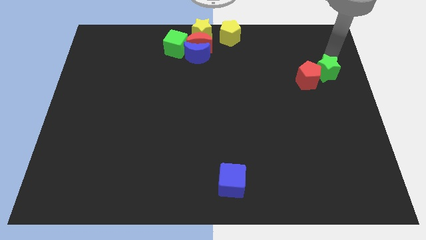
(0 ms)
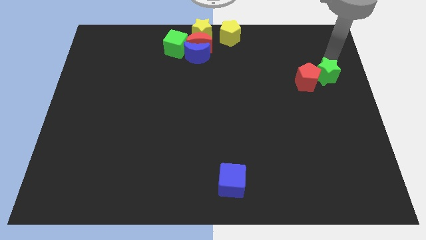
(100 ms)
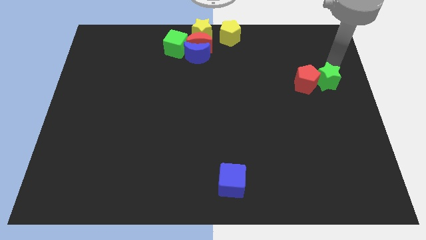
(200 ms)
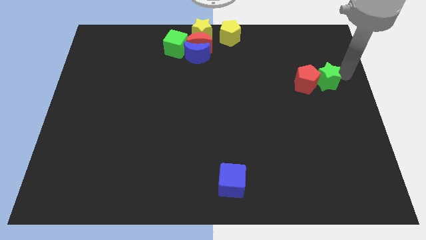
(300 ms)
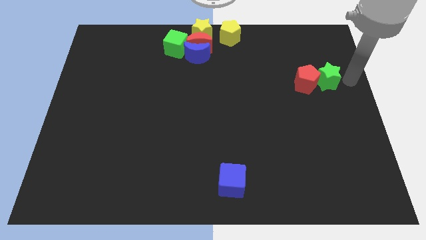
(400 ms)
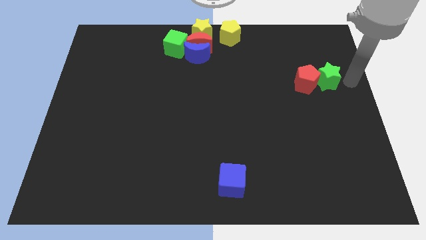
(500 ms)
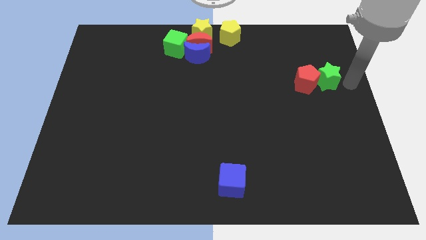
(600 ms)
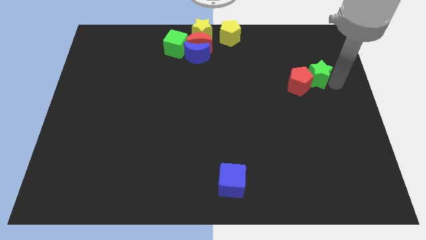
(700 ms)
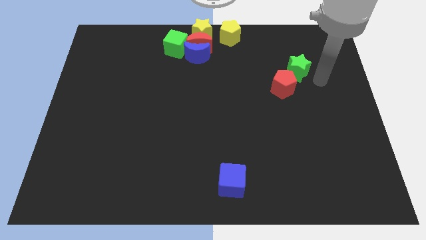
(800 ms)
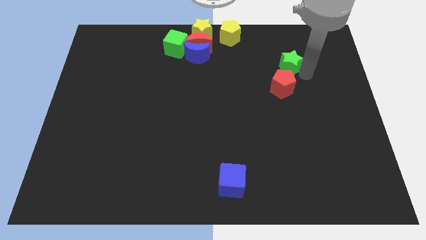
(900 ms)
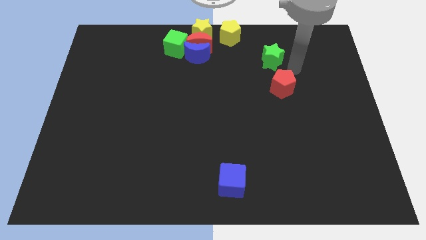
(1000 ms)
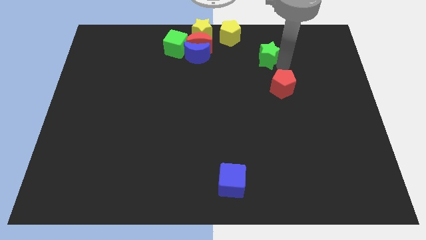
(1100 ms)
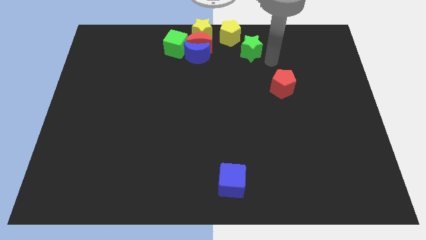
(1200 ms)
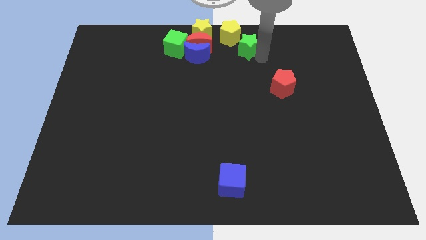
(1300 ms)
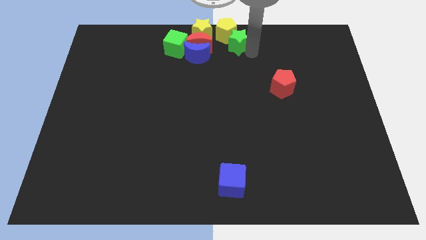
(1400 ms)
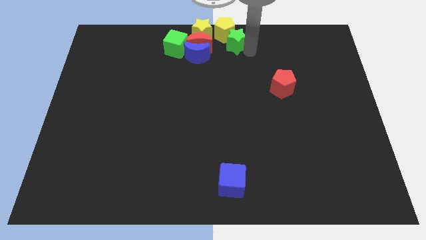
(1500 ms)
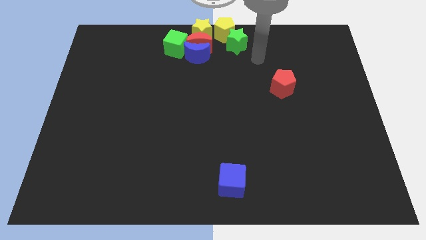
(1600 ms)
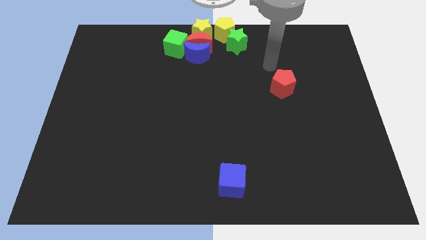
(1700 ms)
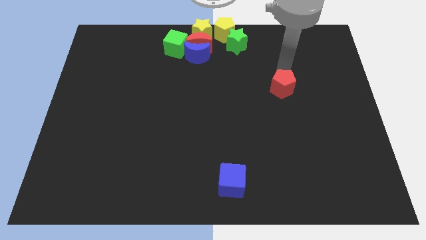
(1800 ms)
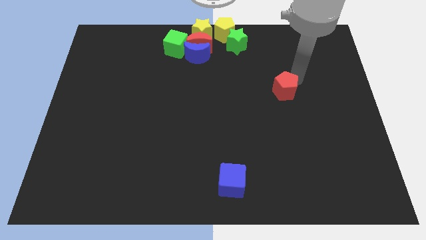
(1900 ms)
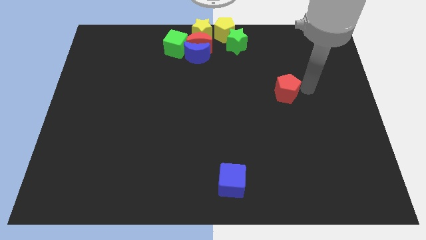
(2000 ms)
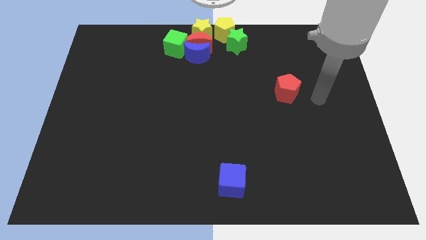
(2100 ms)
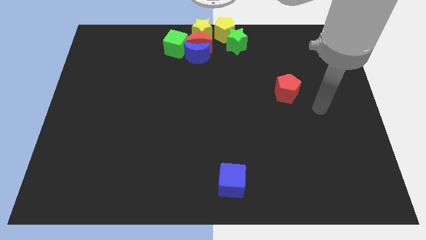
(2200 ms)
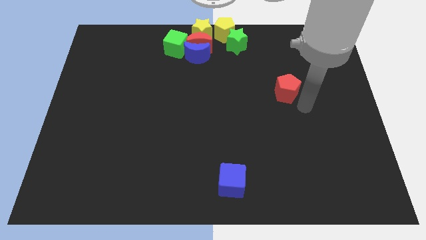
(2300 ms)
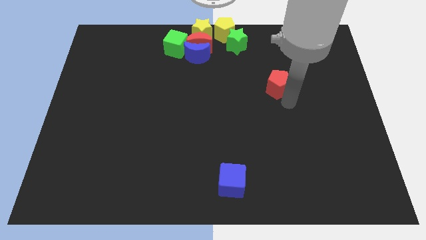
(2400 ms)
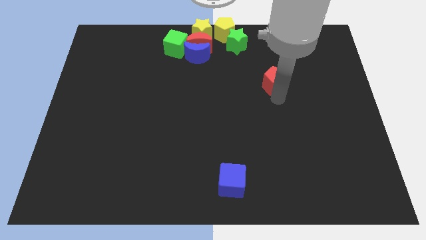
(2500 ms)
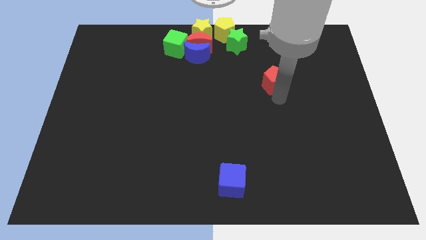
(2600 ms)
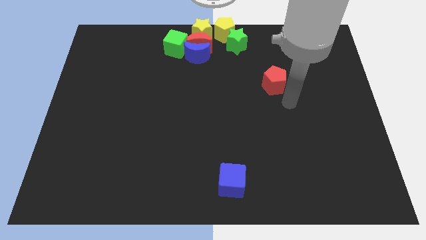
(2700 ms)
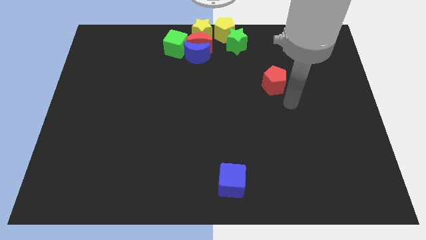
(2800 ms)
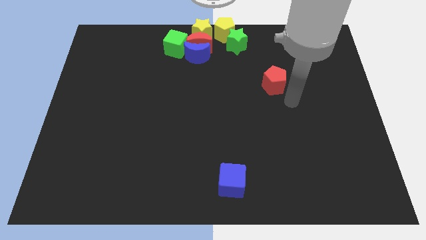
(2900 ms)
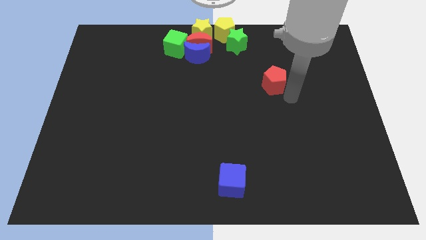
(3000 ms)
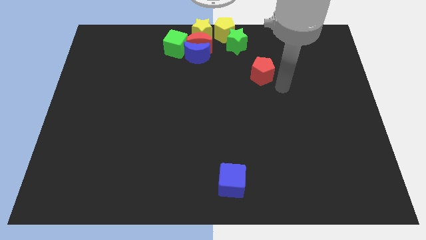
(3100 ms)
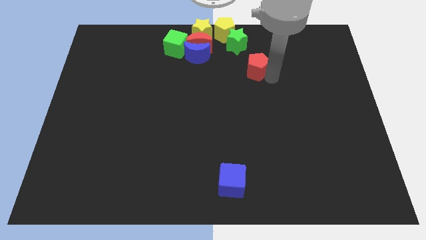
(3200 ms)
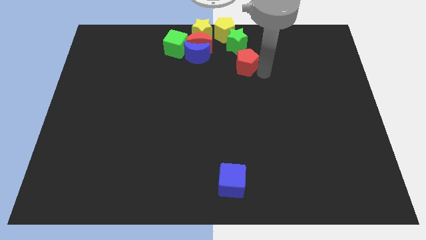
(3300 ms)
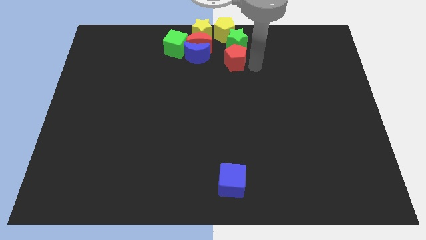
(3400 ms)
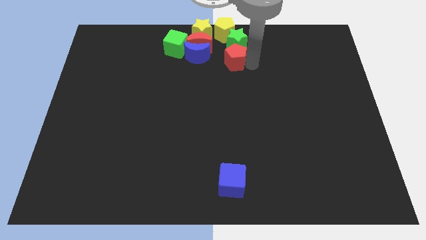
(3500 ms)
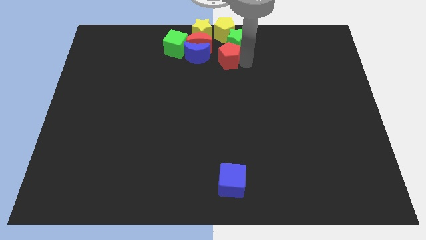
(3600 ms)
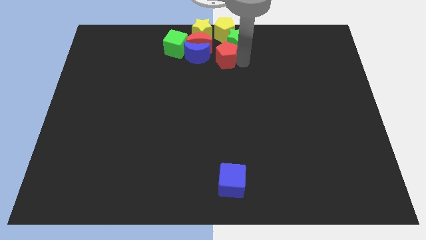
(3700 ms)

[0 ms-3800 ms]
push the green star and the red pentagon to the top center of the board

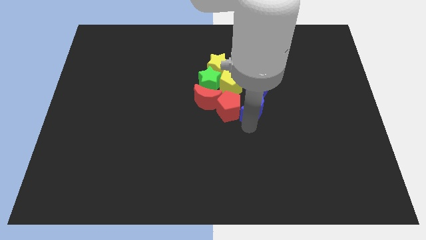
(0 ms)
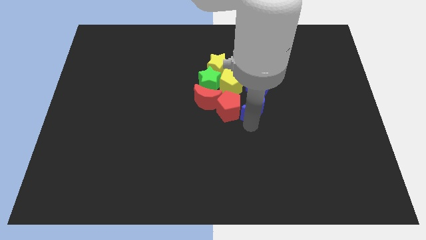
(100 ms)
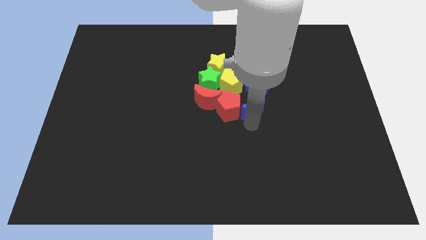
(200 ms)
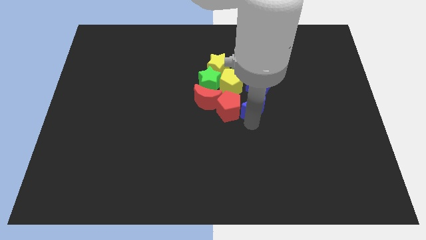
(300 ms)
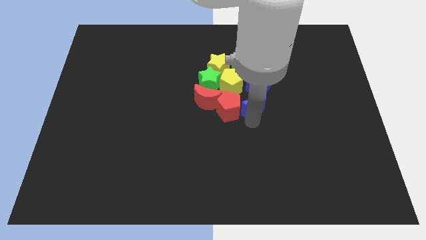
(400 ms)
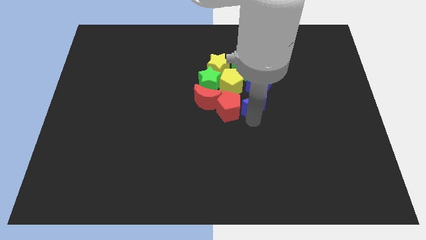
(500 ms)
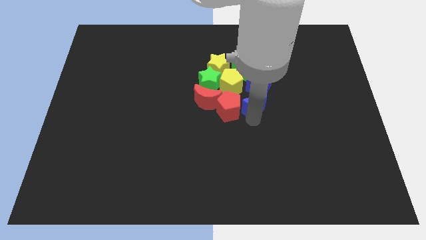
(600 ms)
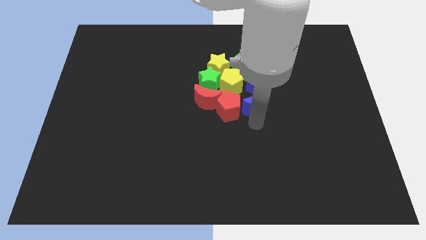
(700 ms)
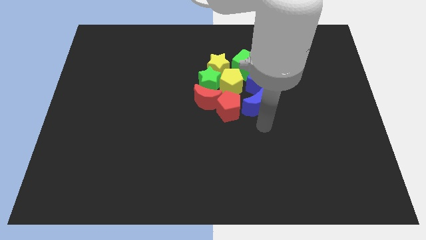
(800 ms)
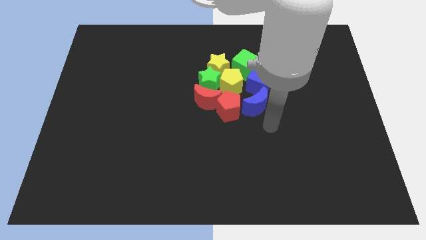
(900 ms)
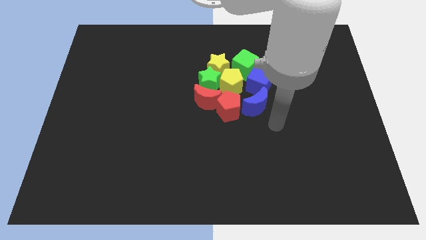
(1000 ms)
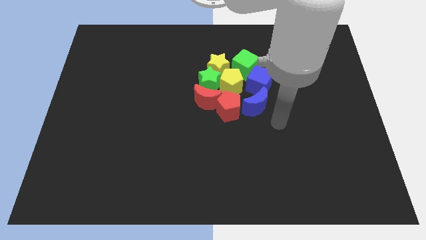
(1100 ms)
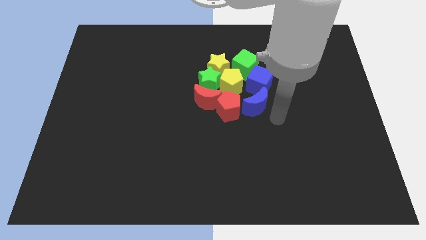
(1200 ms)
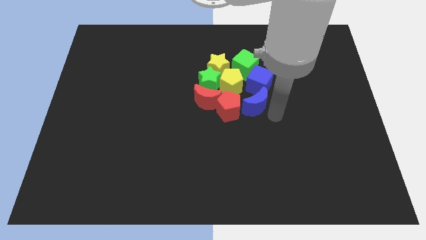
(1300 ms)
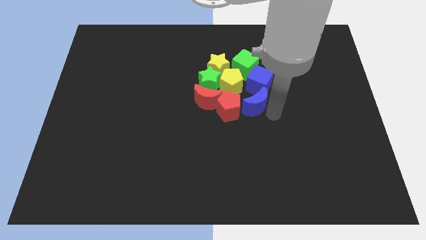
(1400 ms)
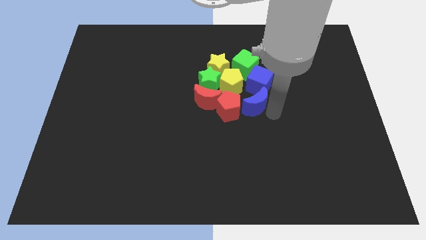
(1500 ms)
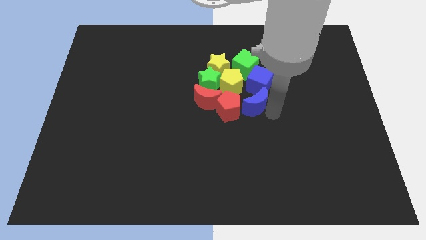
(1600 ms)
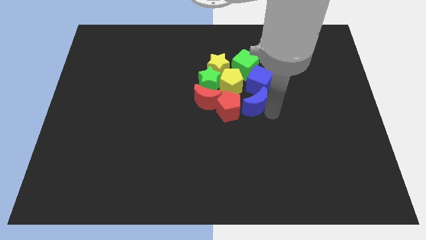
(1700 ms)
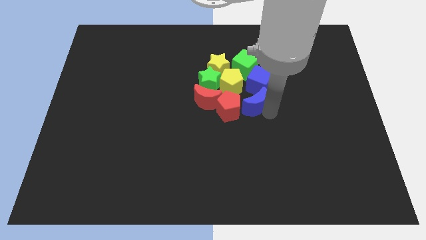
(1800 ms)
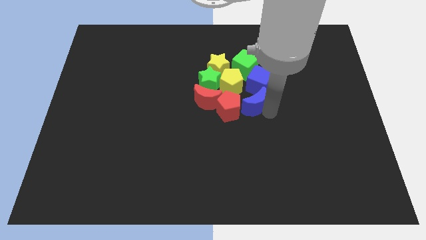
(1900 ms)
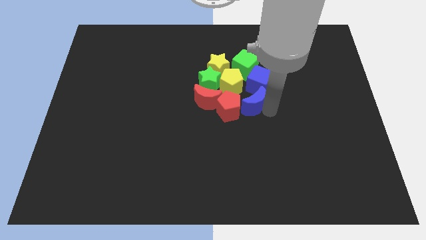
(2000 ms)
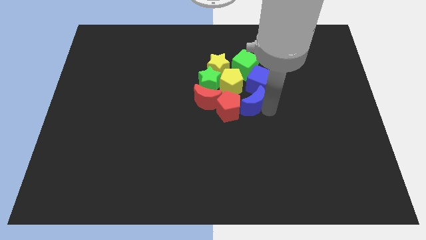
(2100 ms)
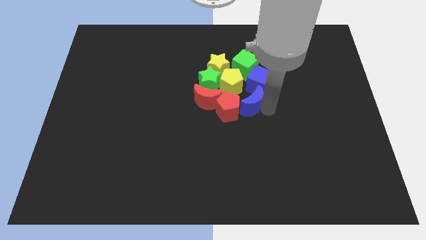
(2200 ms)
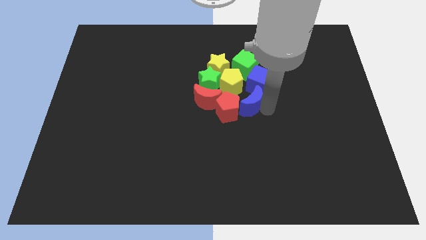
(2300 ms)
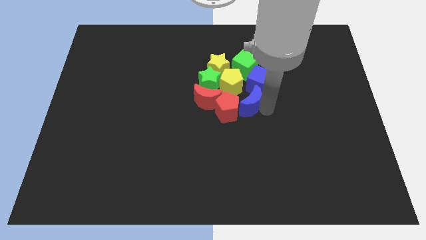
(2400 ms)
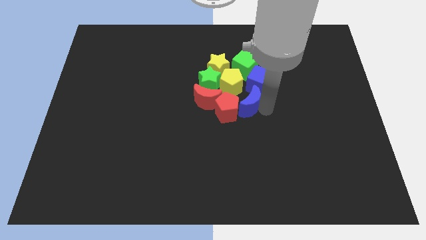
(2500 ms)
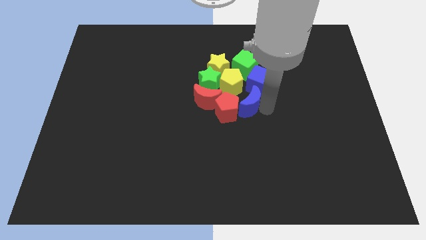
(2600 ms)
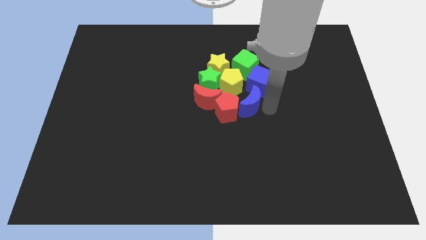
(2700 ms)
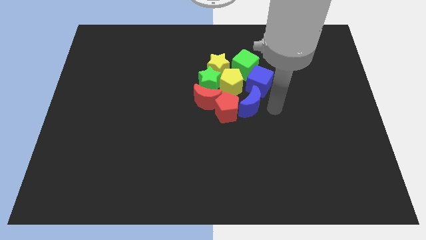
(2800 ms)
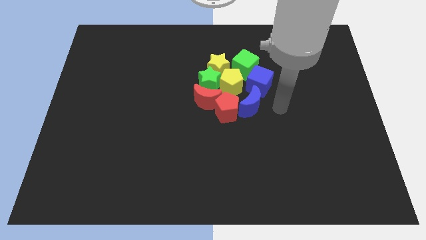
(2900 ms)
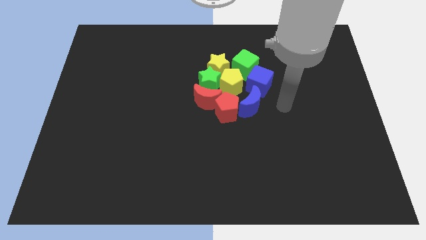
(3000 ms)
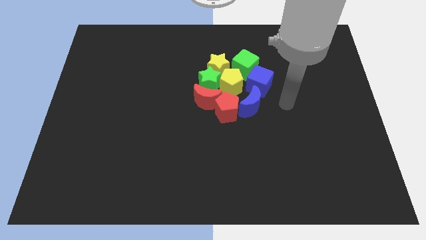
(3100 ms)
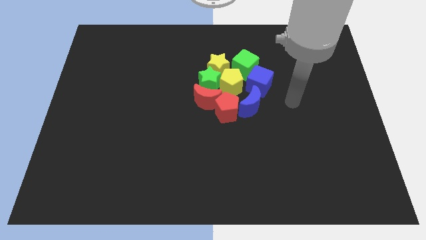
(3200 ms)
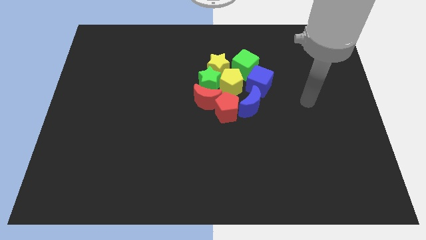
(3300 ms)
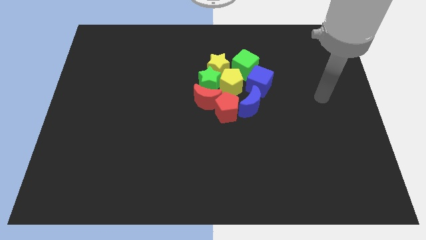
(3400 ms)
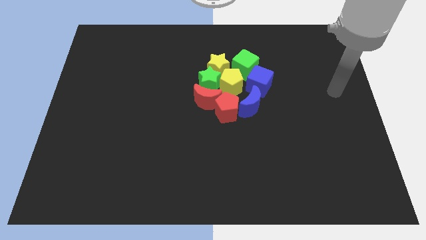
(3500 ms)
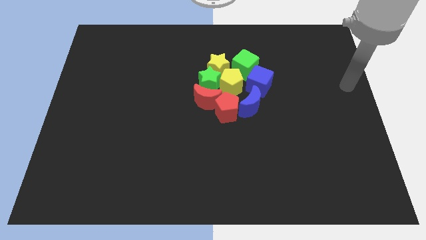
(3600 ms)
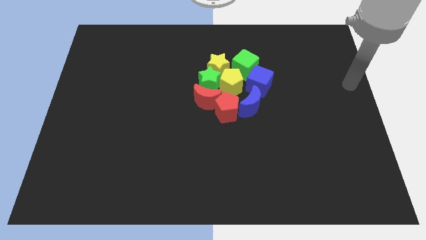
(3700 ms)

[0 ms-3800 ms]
slightly move the blue moon towards left

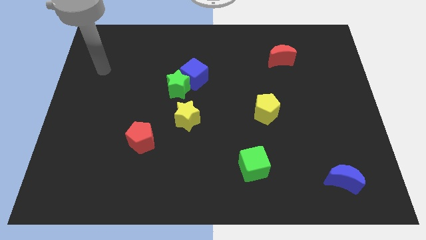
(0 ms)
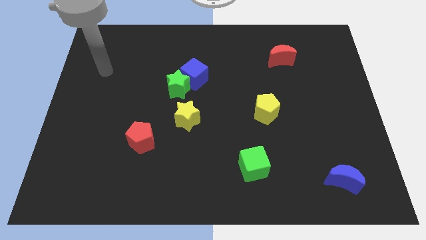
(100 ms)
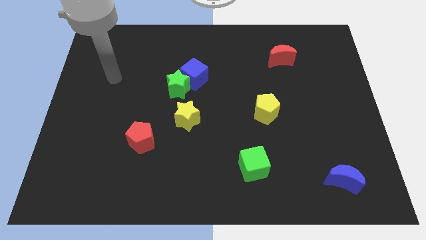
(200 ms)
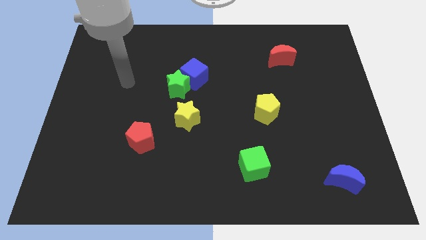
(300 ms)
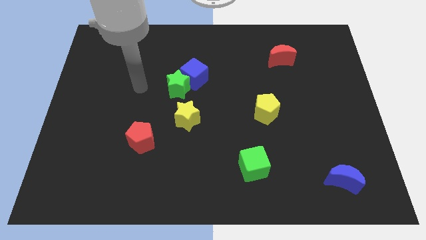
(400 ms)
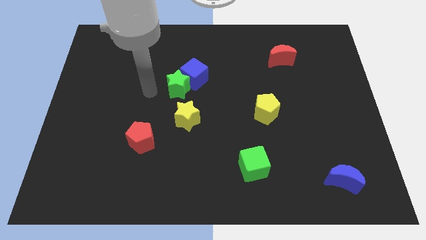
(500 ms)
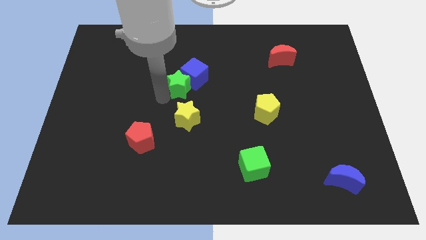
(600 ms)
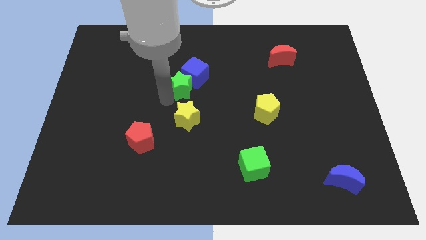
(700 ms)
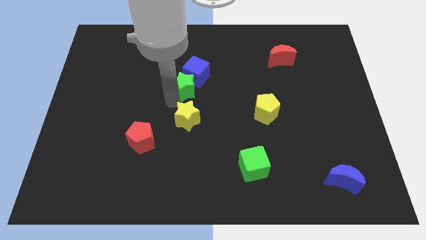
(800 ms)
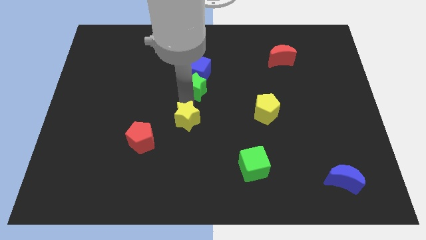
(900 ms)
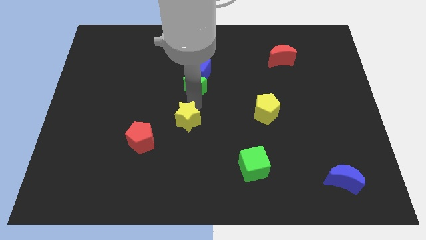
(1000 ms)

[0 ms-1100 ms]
point your arm between green cube and yellow star

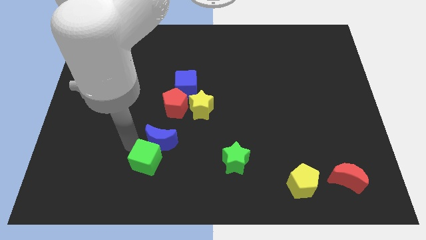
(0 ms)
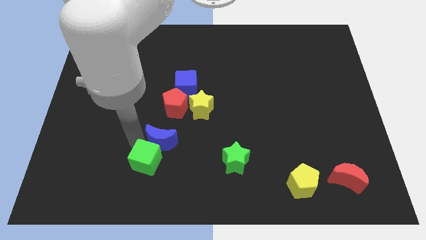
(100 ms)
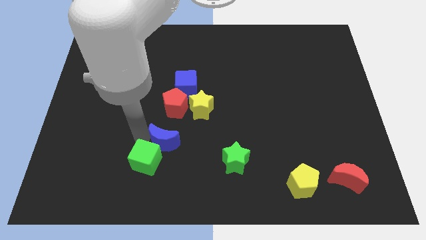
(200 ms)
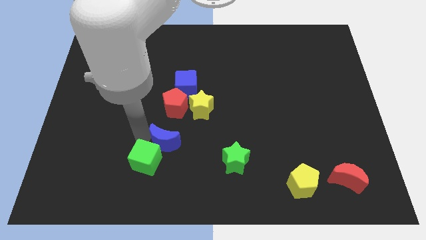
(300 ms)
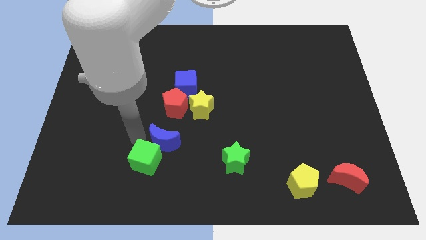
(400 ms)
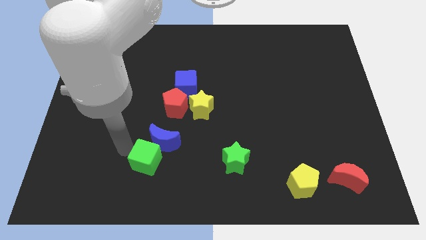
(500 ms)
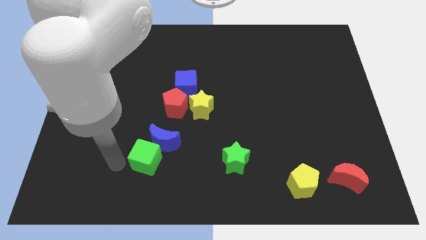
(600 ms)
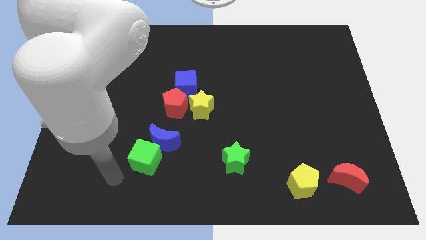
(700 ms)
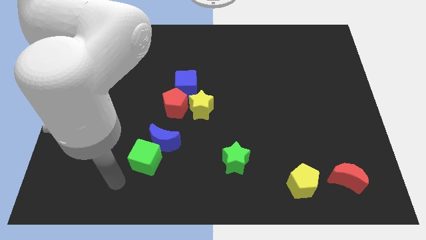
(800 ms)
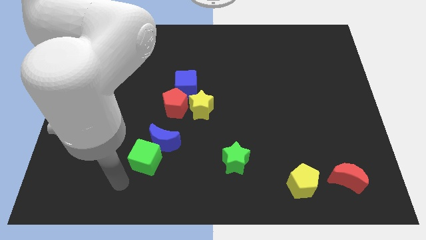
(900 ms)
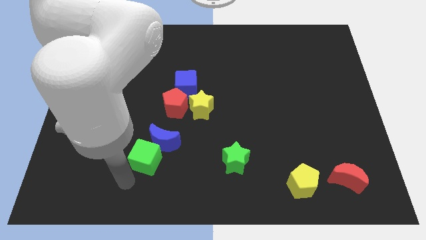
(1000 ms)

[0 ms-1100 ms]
slightly push the blue moon
